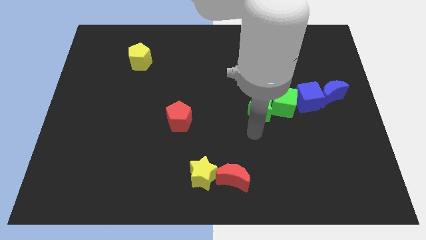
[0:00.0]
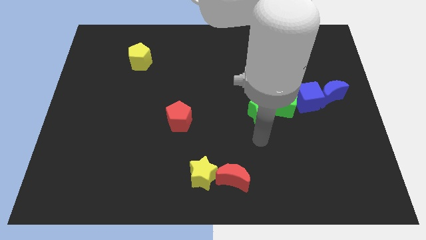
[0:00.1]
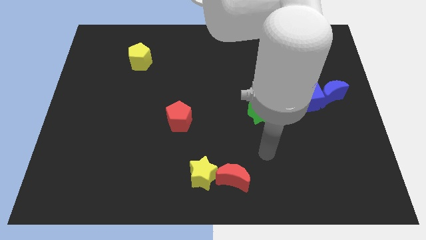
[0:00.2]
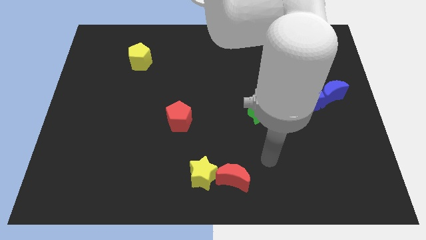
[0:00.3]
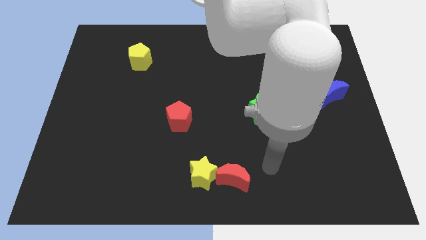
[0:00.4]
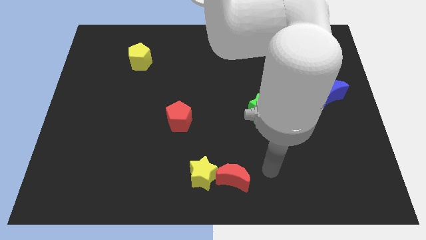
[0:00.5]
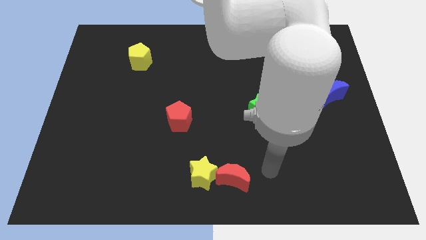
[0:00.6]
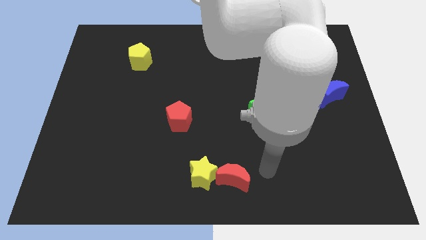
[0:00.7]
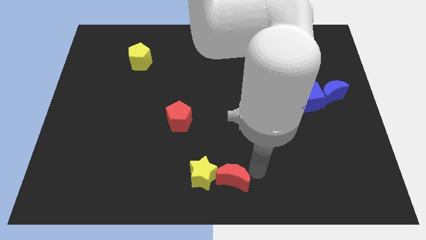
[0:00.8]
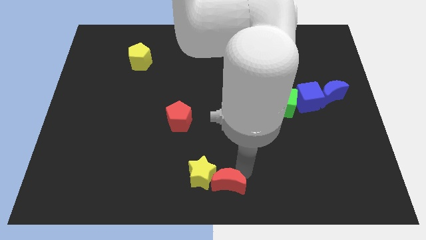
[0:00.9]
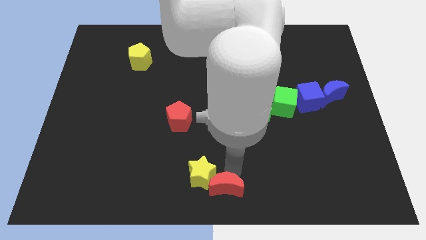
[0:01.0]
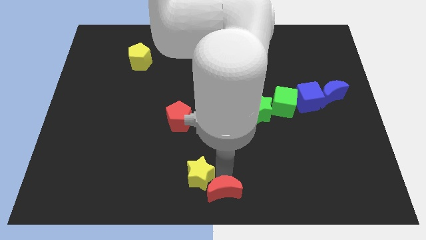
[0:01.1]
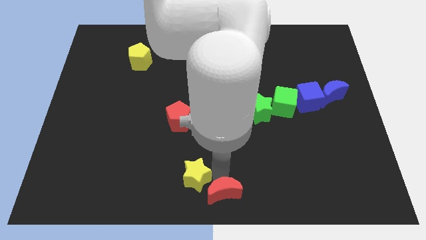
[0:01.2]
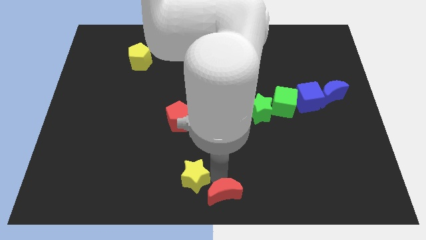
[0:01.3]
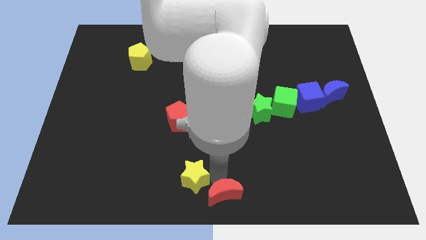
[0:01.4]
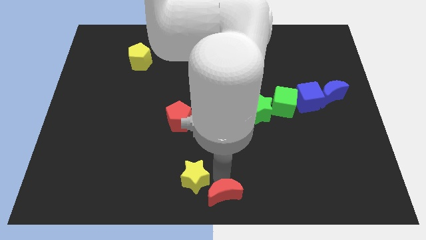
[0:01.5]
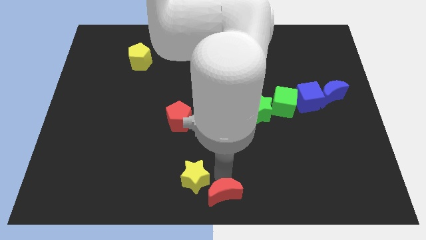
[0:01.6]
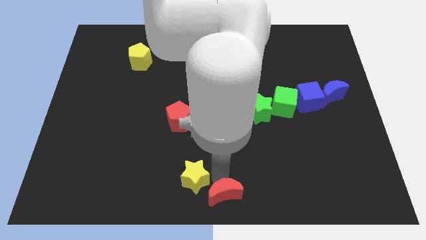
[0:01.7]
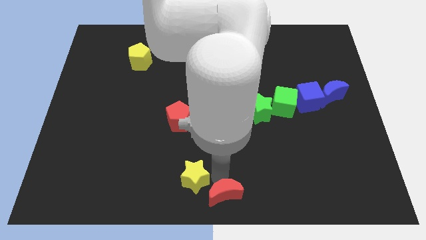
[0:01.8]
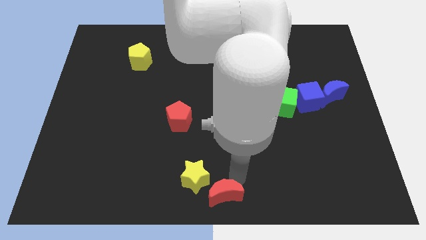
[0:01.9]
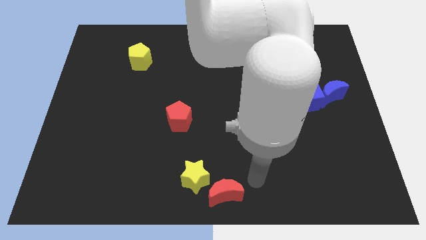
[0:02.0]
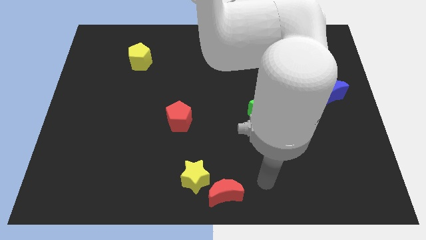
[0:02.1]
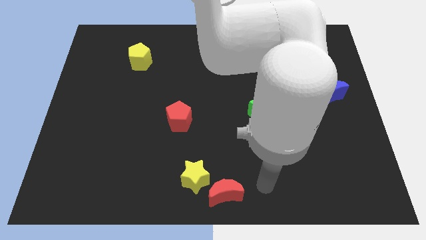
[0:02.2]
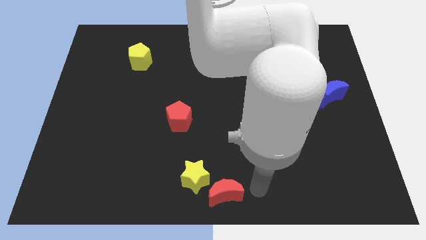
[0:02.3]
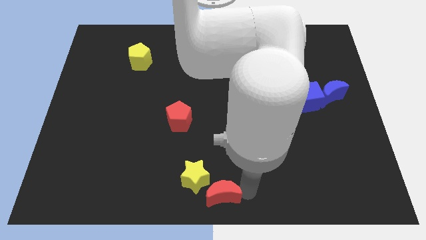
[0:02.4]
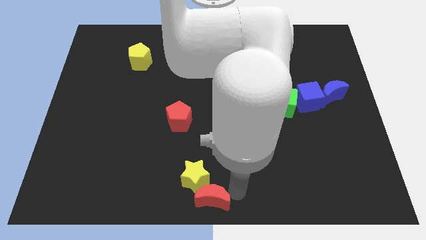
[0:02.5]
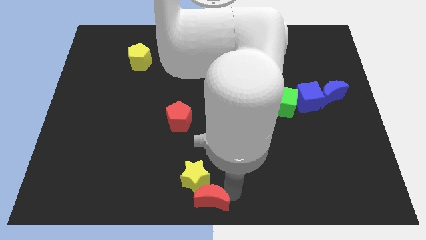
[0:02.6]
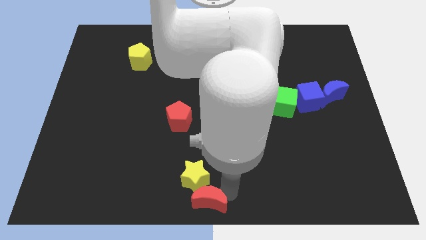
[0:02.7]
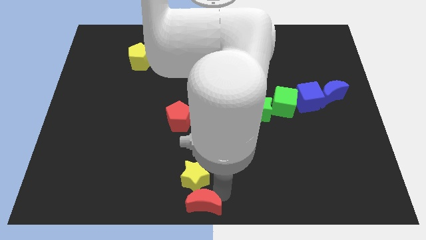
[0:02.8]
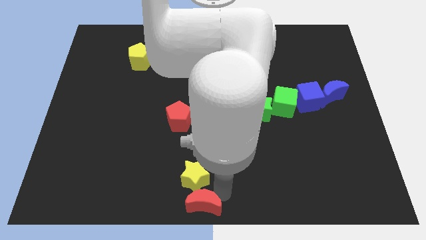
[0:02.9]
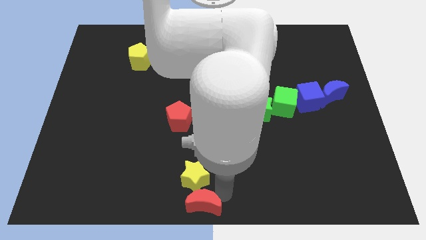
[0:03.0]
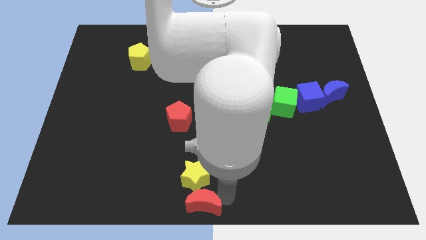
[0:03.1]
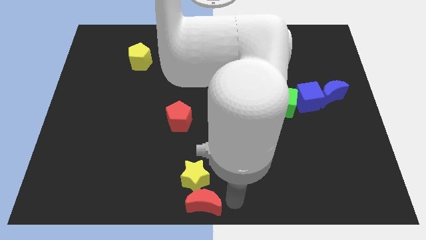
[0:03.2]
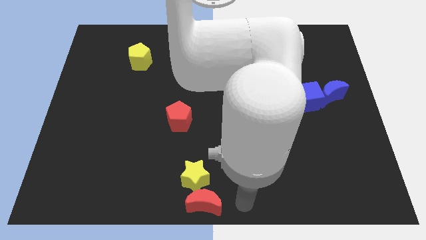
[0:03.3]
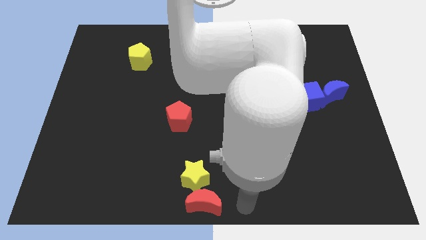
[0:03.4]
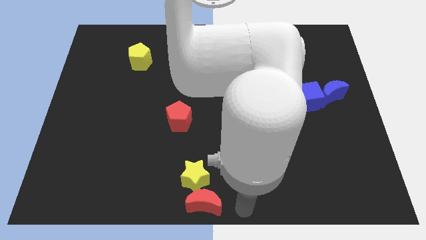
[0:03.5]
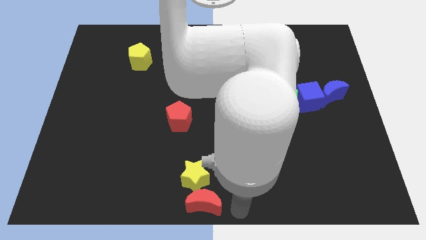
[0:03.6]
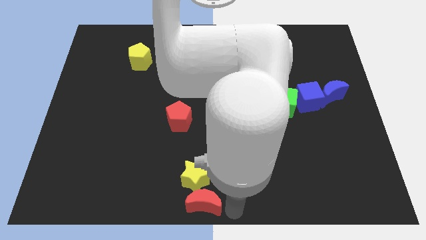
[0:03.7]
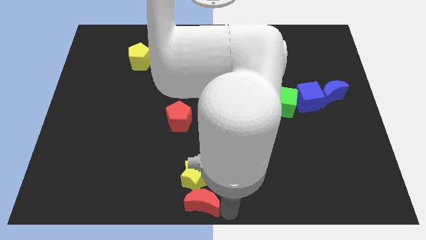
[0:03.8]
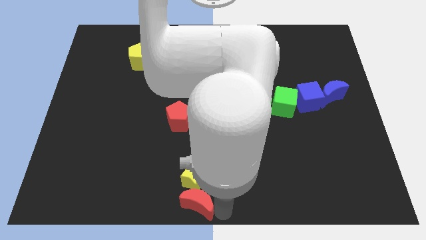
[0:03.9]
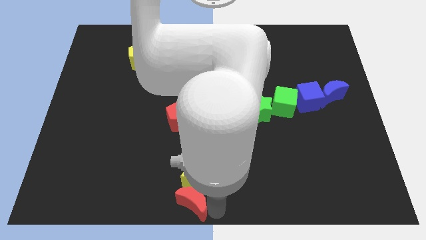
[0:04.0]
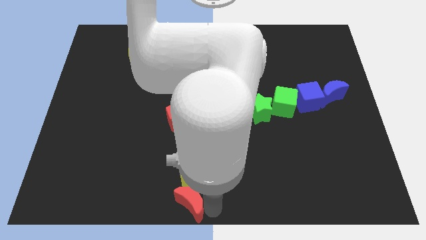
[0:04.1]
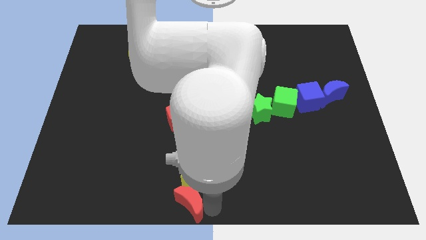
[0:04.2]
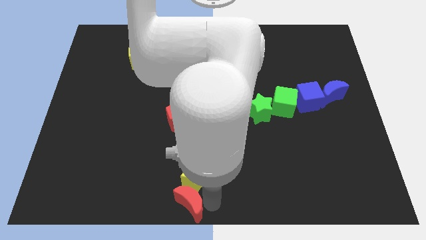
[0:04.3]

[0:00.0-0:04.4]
place the red moon below the yellow star

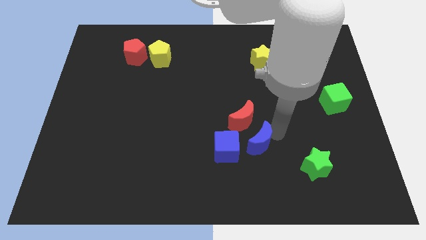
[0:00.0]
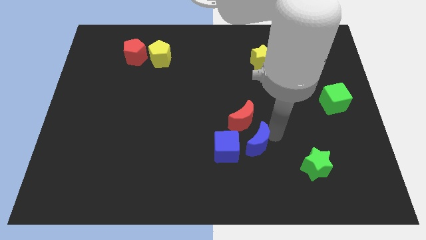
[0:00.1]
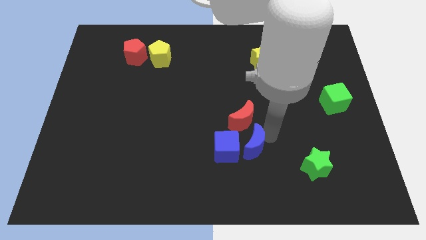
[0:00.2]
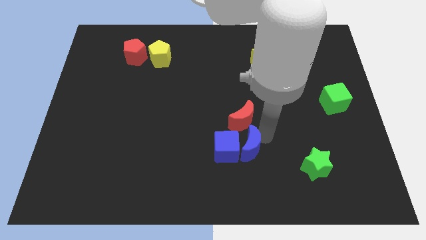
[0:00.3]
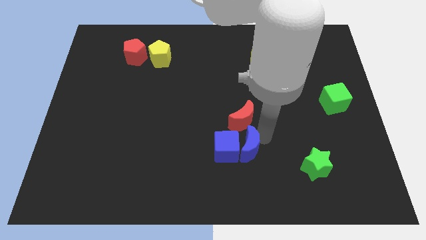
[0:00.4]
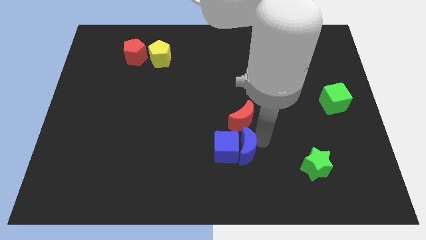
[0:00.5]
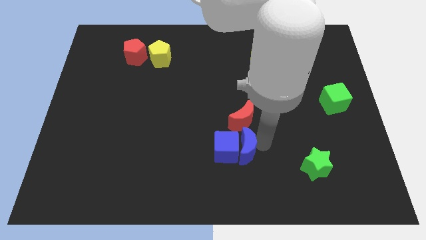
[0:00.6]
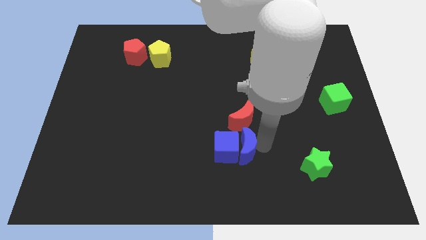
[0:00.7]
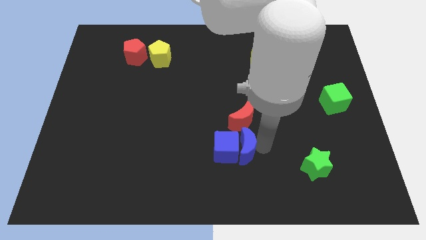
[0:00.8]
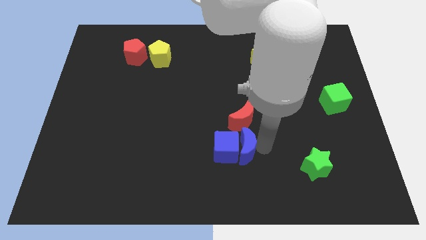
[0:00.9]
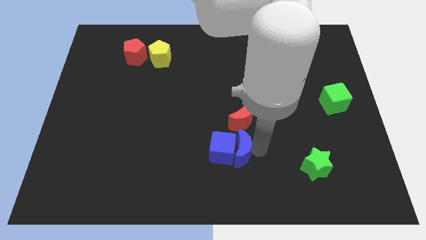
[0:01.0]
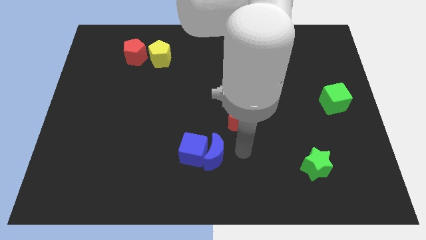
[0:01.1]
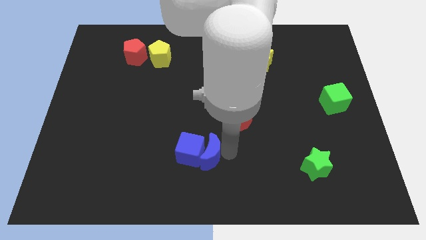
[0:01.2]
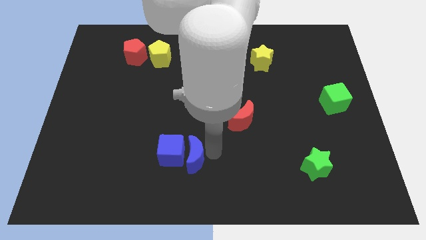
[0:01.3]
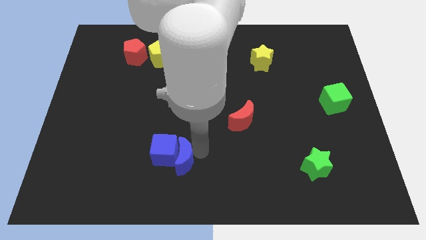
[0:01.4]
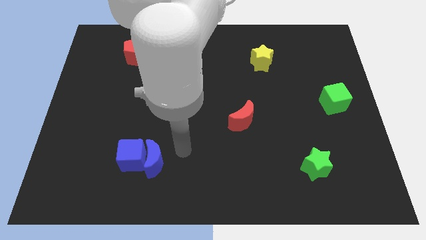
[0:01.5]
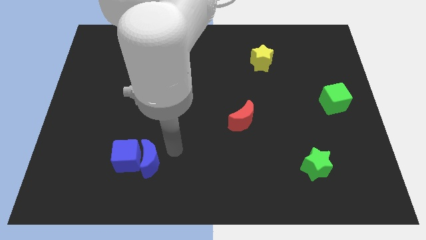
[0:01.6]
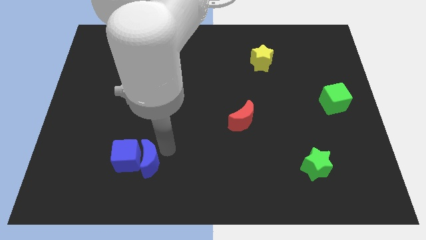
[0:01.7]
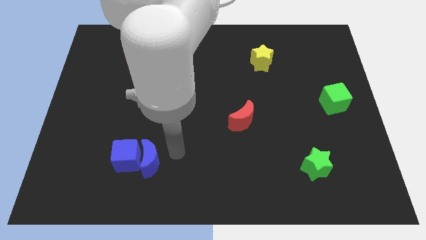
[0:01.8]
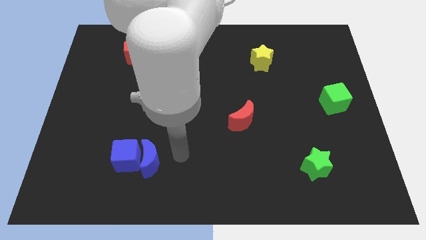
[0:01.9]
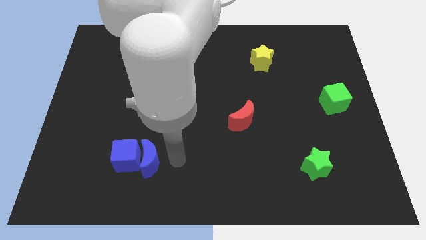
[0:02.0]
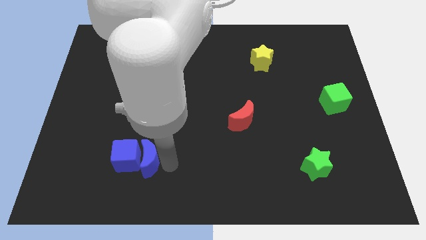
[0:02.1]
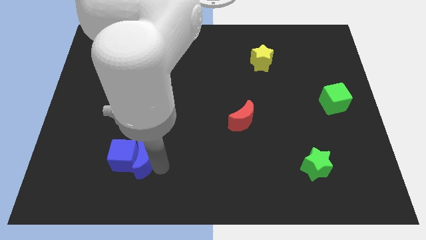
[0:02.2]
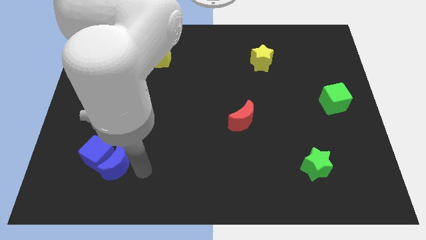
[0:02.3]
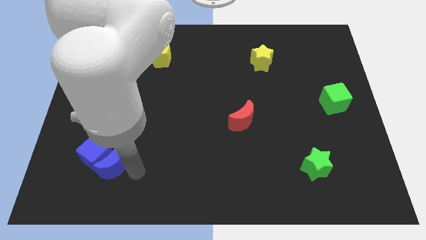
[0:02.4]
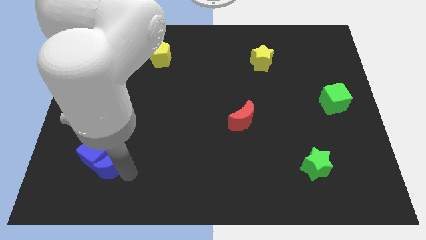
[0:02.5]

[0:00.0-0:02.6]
slide the blue blocks below the red pentagon

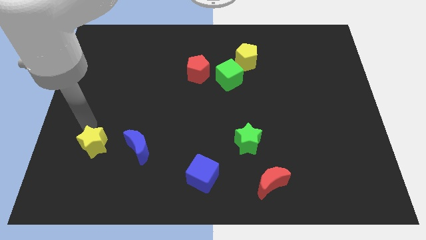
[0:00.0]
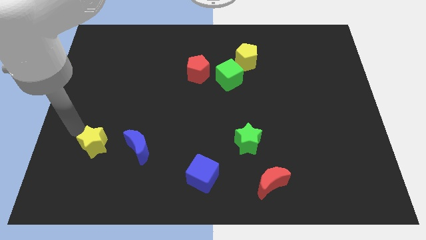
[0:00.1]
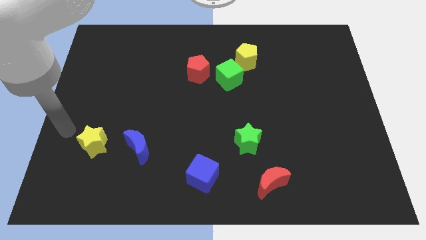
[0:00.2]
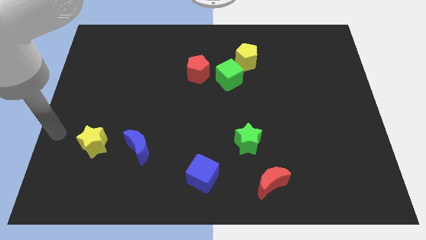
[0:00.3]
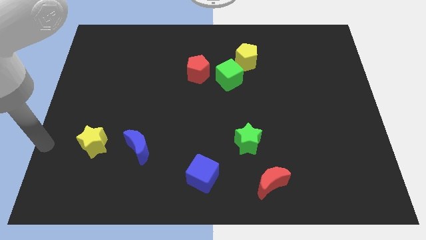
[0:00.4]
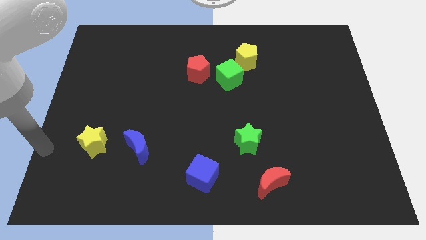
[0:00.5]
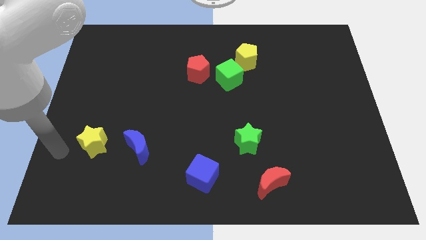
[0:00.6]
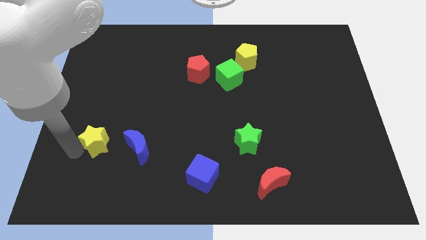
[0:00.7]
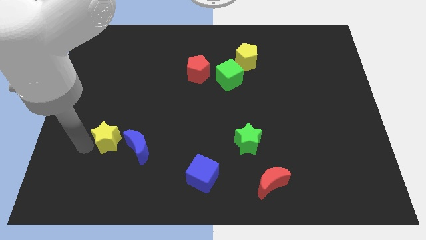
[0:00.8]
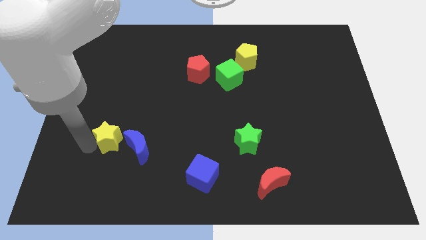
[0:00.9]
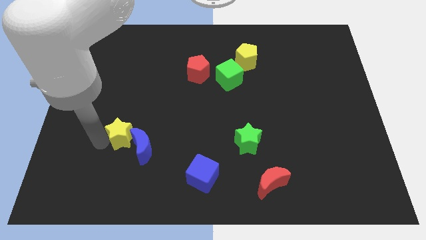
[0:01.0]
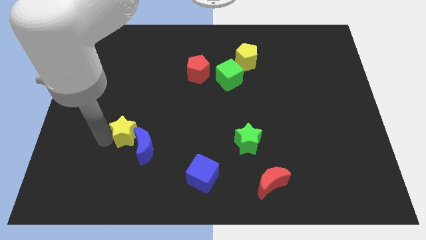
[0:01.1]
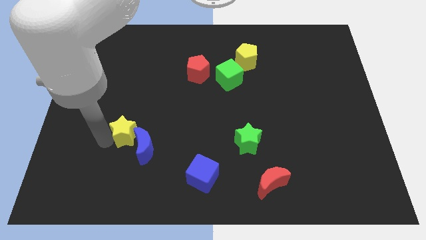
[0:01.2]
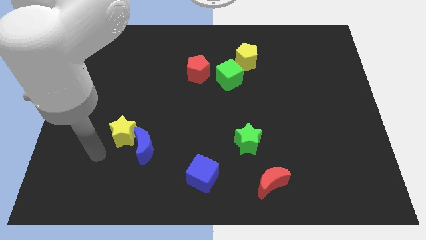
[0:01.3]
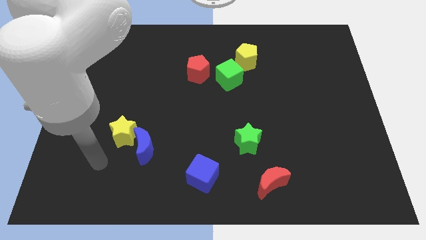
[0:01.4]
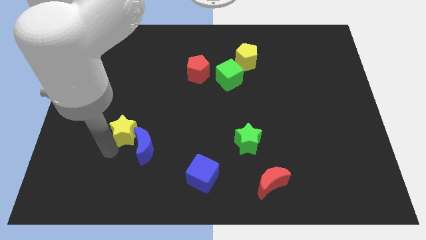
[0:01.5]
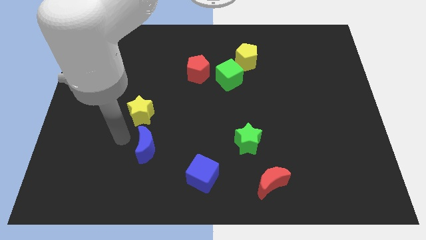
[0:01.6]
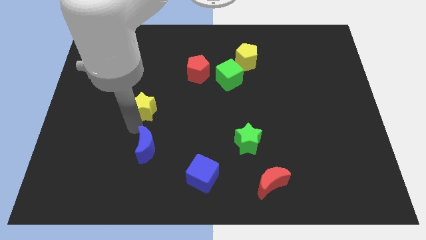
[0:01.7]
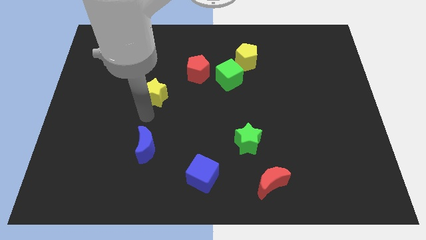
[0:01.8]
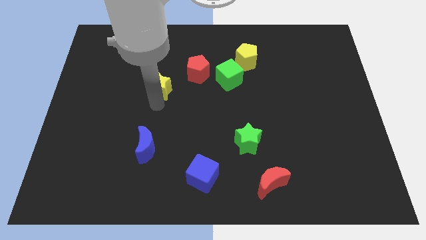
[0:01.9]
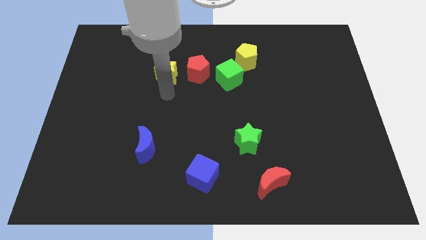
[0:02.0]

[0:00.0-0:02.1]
push the yellow star close to the red pentagon
